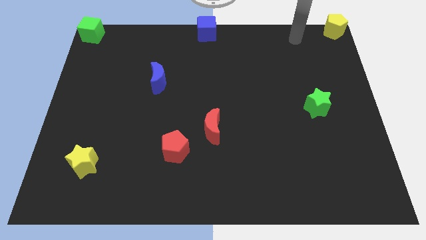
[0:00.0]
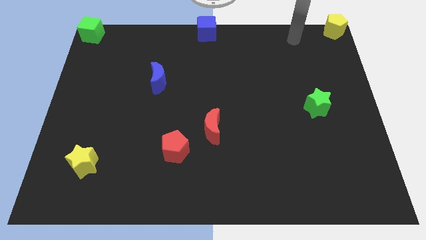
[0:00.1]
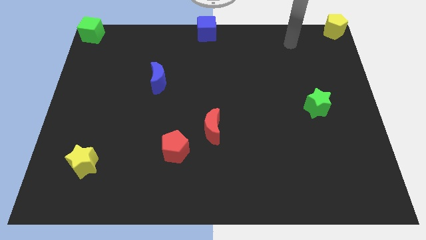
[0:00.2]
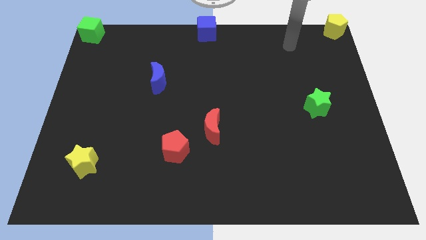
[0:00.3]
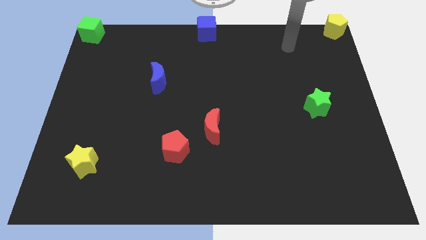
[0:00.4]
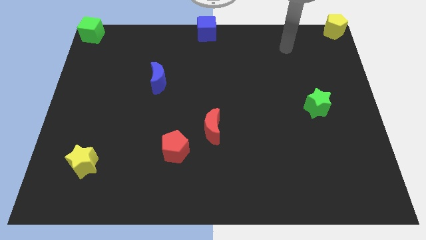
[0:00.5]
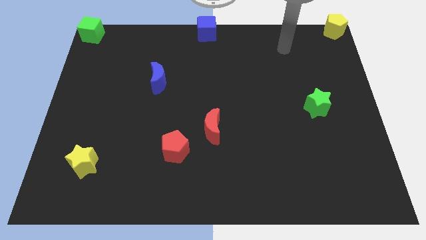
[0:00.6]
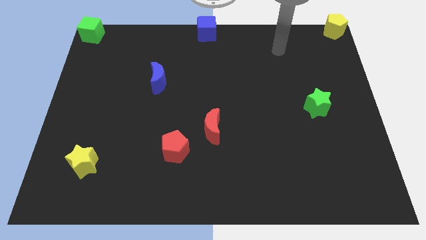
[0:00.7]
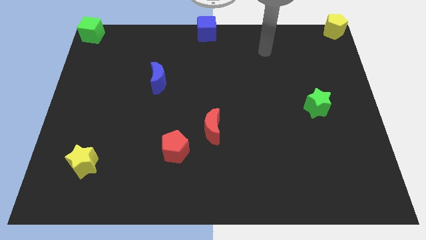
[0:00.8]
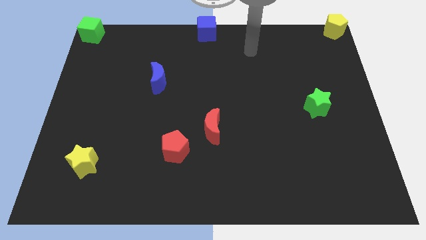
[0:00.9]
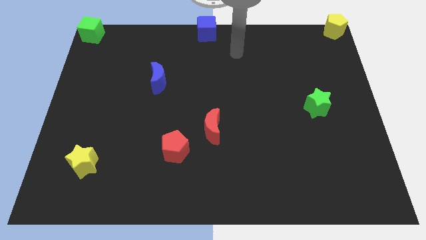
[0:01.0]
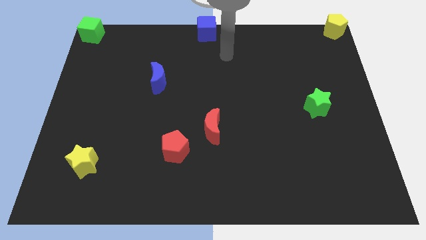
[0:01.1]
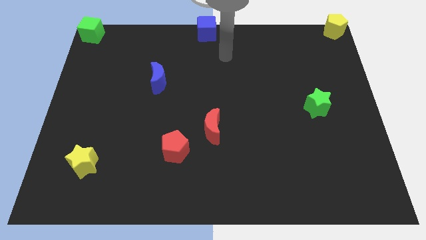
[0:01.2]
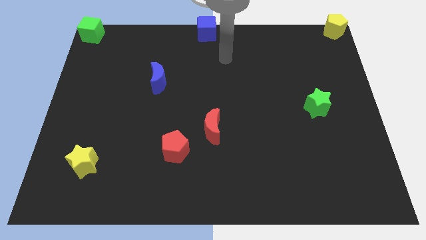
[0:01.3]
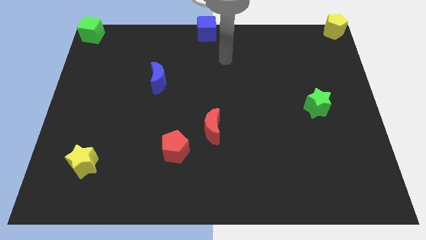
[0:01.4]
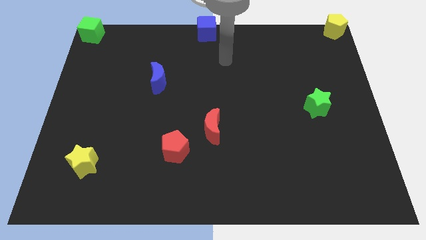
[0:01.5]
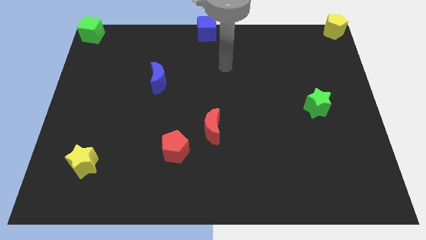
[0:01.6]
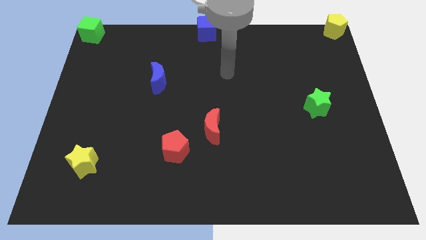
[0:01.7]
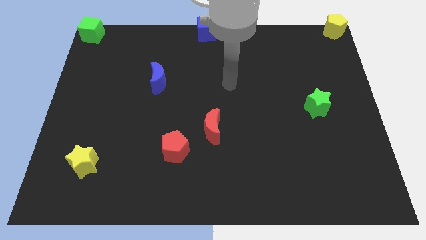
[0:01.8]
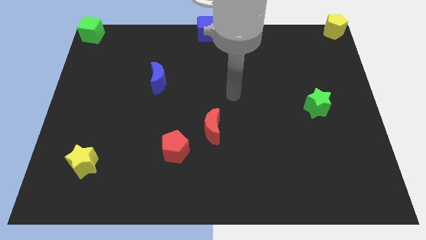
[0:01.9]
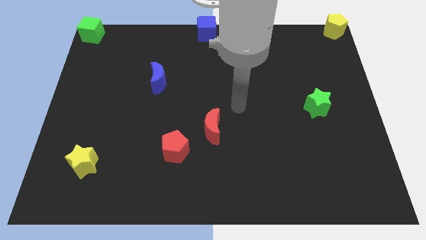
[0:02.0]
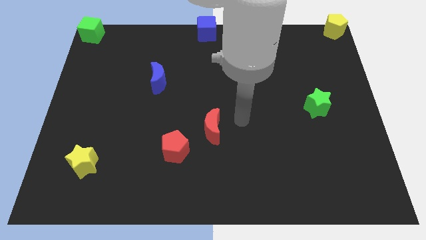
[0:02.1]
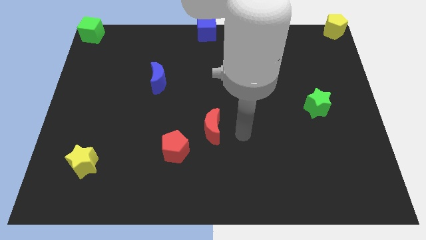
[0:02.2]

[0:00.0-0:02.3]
place your hand to right side of the red crescent

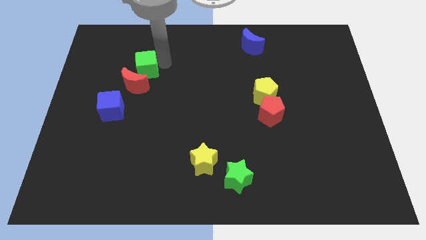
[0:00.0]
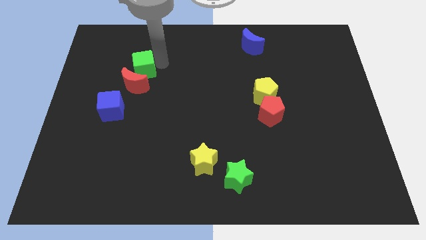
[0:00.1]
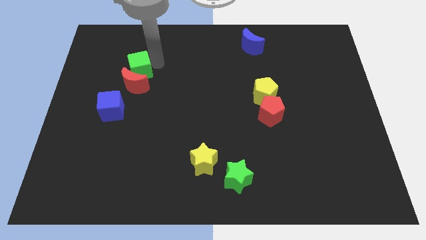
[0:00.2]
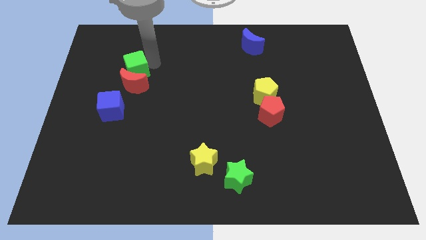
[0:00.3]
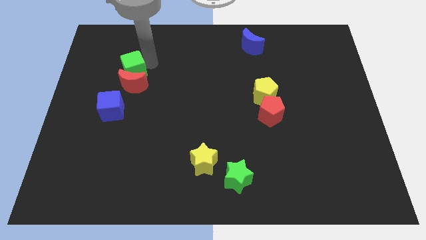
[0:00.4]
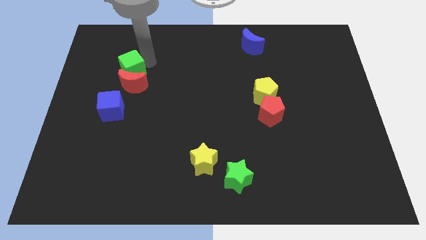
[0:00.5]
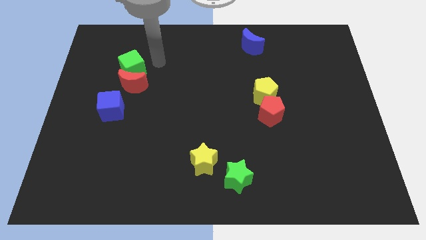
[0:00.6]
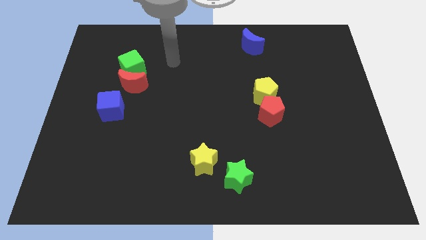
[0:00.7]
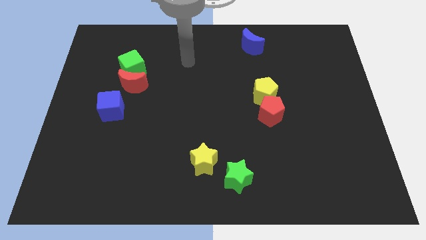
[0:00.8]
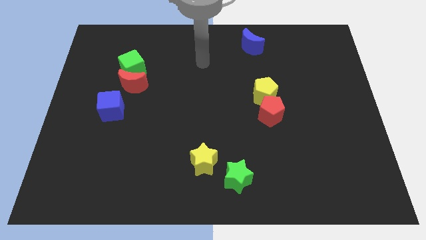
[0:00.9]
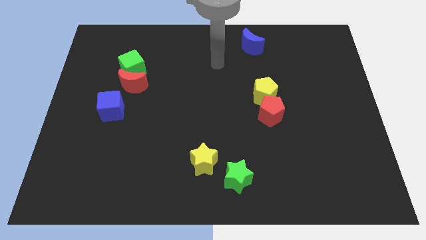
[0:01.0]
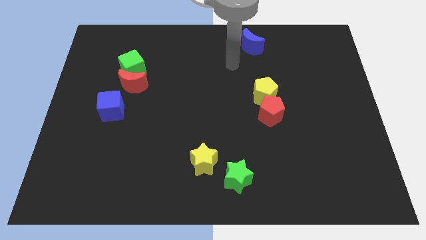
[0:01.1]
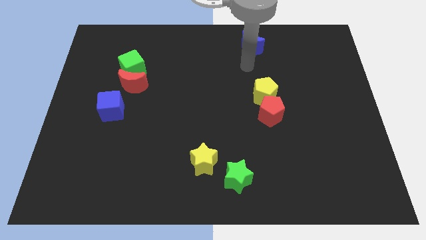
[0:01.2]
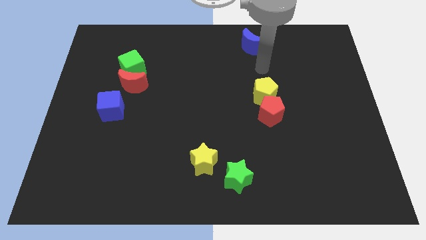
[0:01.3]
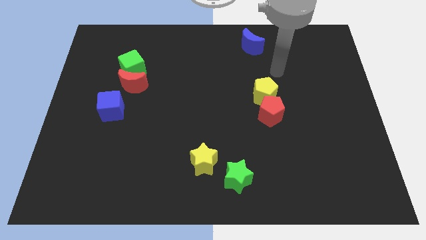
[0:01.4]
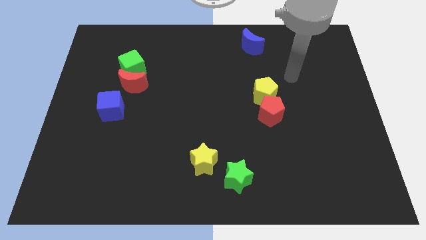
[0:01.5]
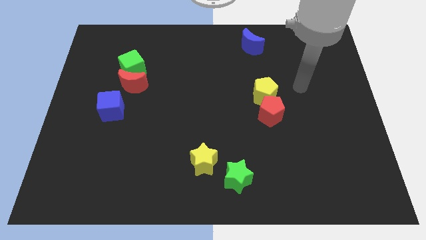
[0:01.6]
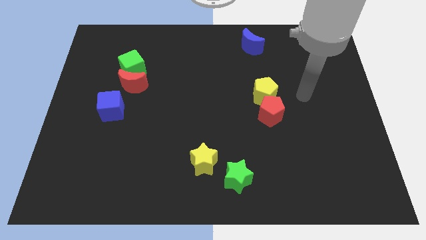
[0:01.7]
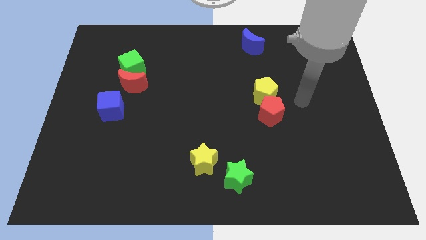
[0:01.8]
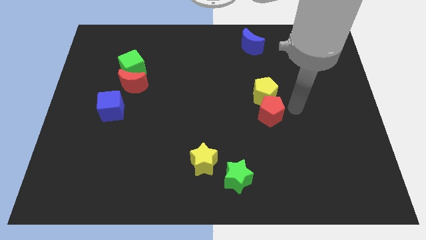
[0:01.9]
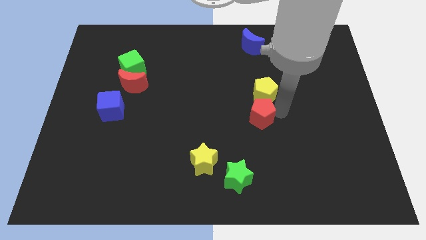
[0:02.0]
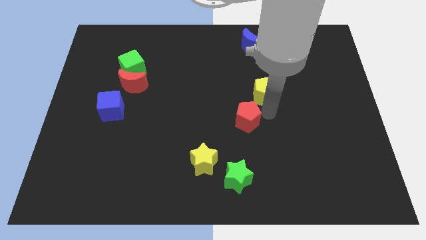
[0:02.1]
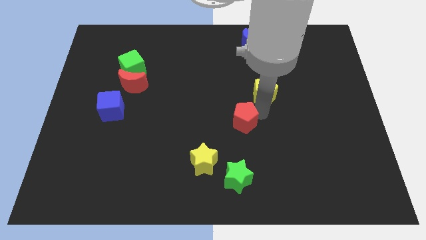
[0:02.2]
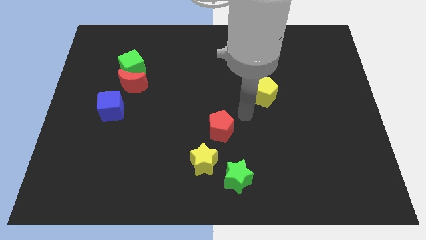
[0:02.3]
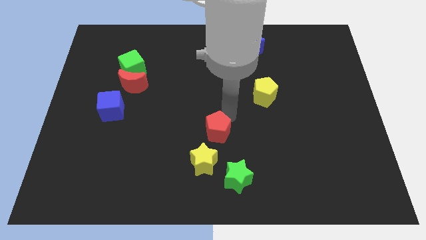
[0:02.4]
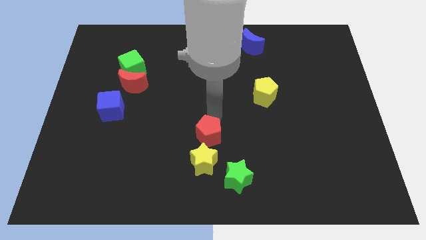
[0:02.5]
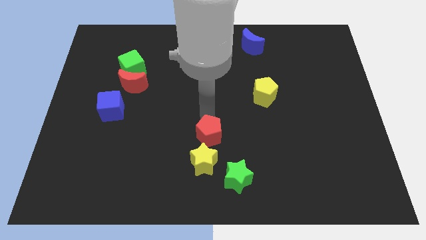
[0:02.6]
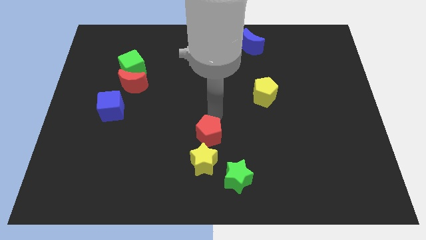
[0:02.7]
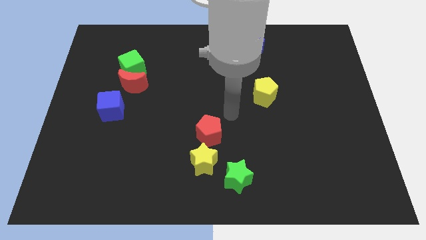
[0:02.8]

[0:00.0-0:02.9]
place the red pentagon above the yellow star

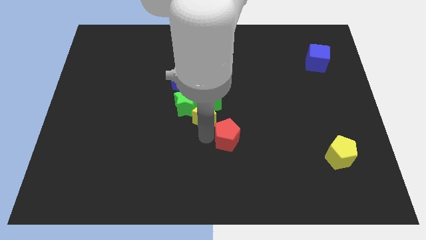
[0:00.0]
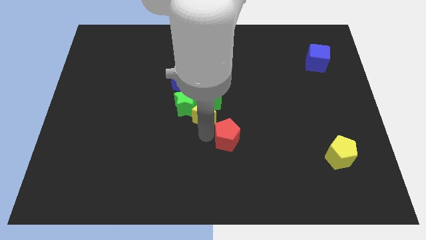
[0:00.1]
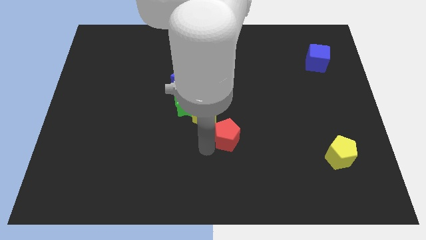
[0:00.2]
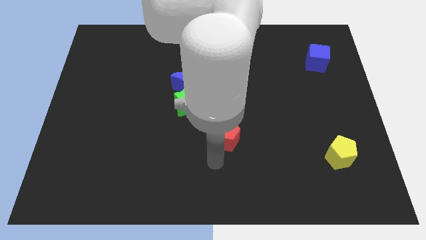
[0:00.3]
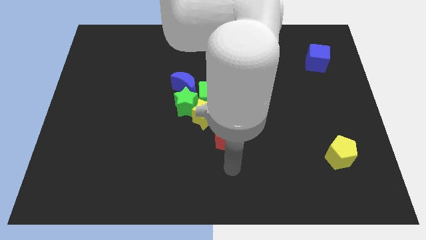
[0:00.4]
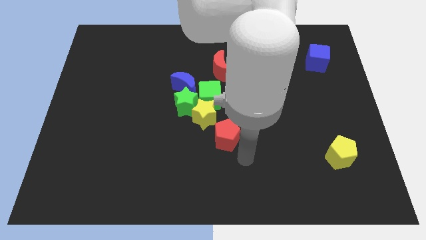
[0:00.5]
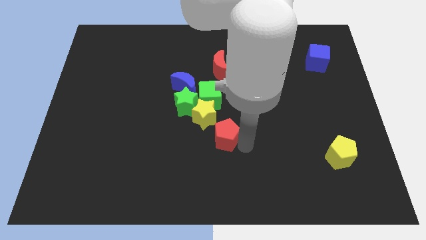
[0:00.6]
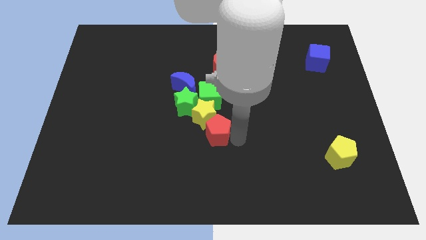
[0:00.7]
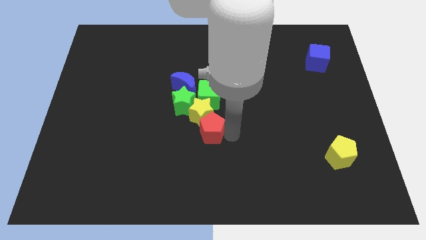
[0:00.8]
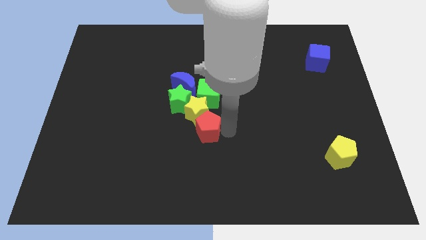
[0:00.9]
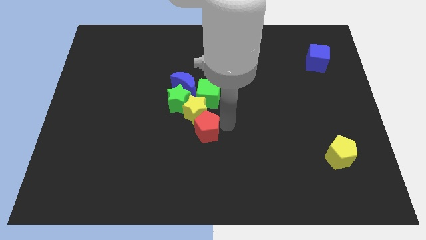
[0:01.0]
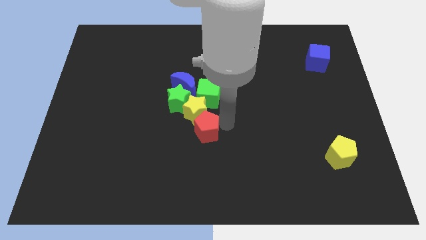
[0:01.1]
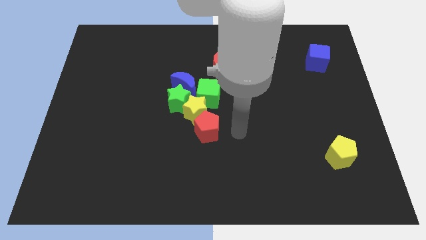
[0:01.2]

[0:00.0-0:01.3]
move the red pentagon into the yellow star

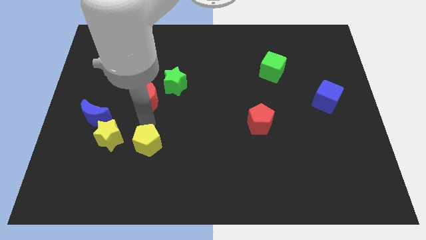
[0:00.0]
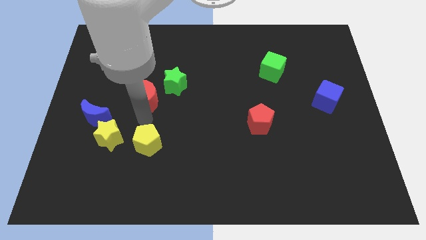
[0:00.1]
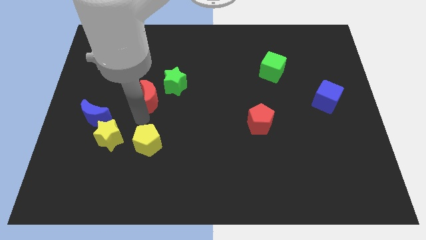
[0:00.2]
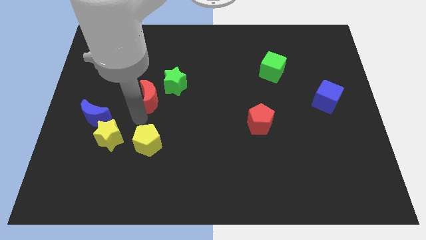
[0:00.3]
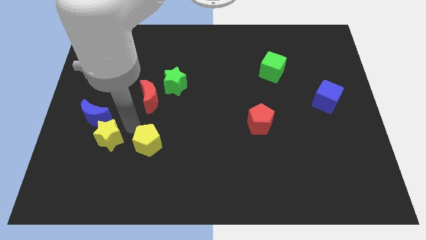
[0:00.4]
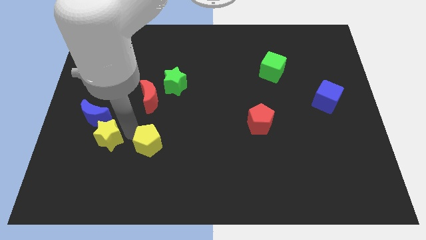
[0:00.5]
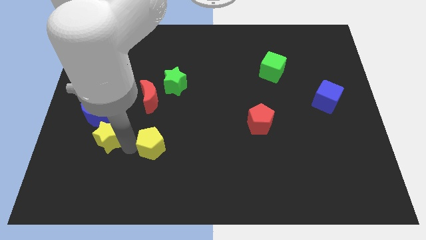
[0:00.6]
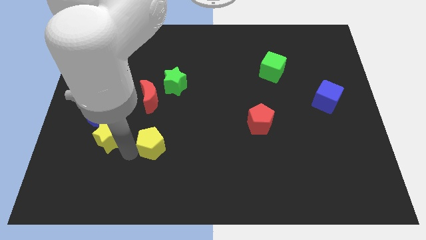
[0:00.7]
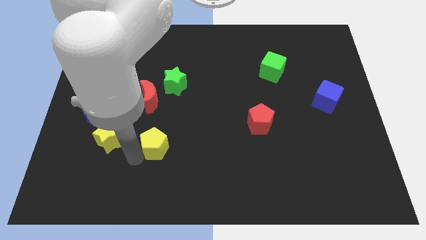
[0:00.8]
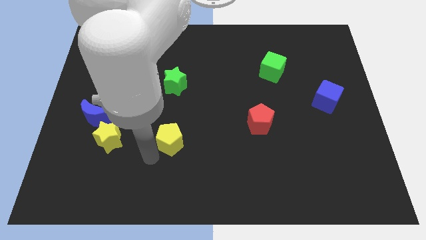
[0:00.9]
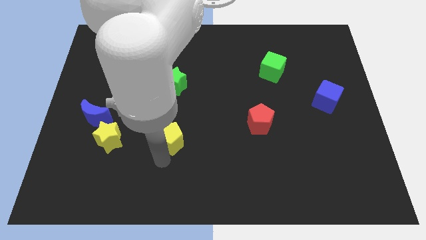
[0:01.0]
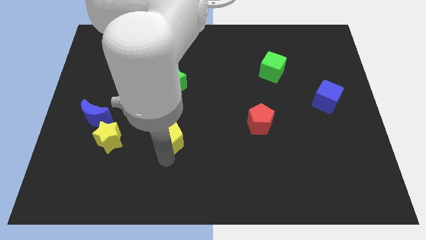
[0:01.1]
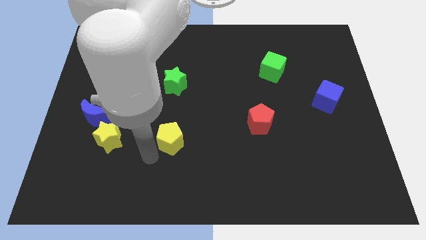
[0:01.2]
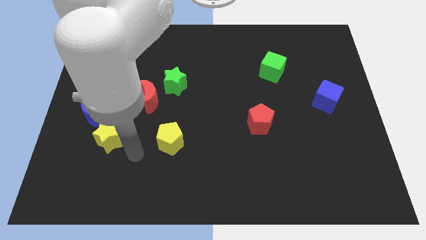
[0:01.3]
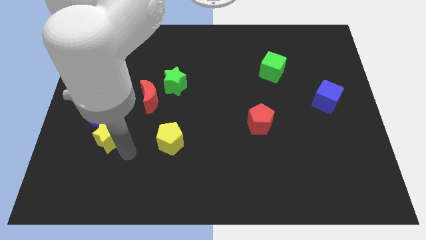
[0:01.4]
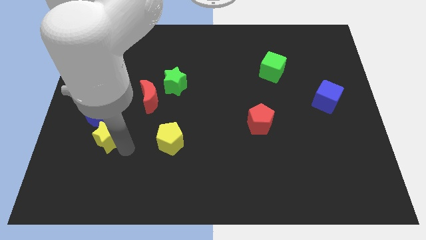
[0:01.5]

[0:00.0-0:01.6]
push the yellow pentagon diagonally to red moon

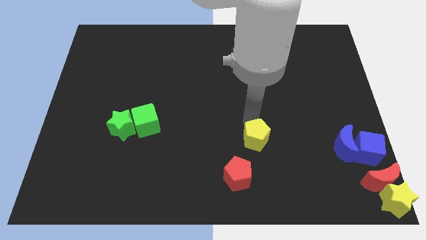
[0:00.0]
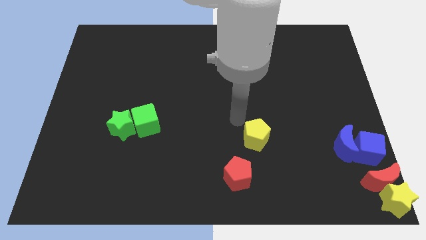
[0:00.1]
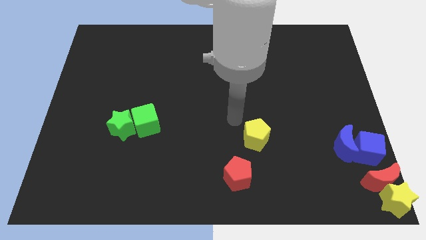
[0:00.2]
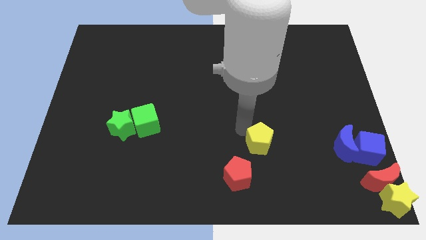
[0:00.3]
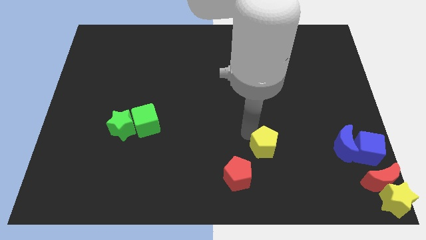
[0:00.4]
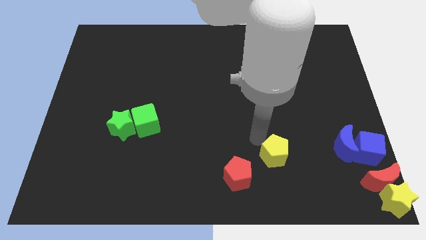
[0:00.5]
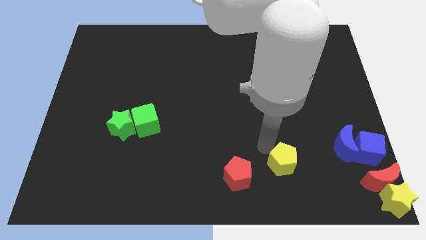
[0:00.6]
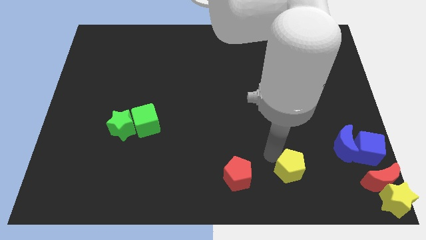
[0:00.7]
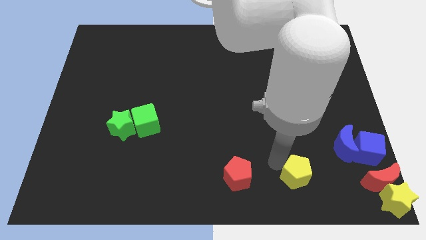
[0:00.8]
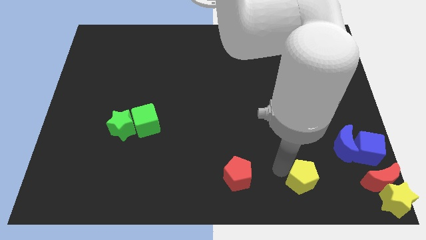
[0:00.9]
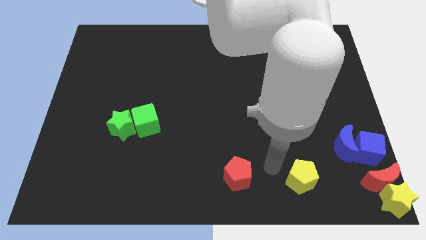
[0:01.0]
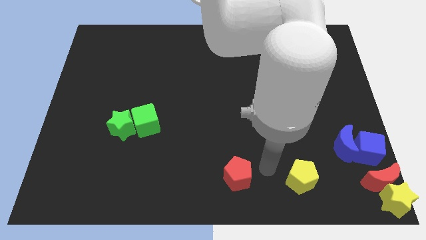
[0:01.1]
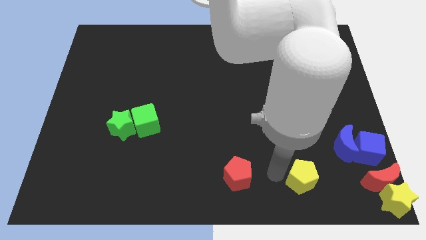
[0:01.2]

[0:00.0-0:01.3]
place the yellow pentagon to the right side of the red pentagon
